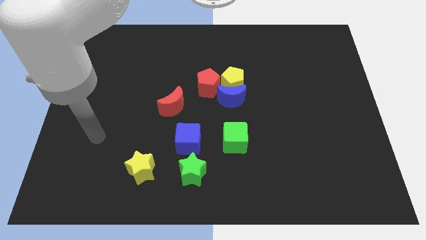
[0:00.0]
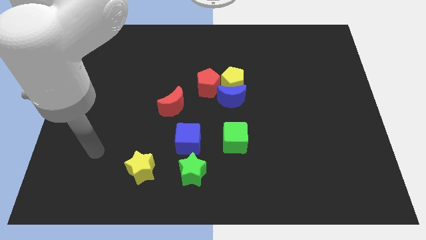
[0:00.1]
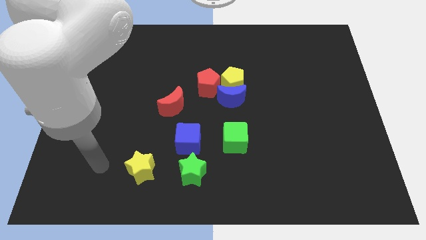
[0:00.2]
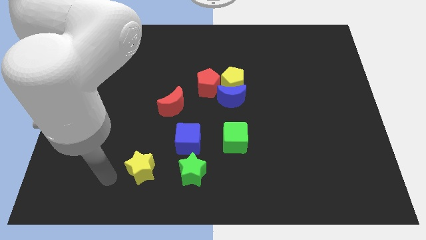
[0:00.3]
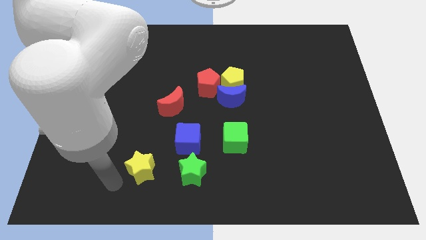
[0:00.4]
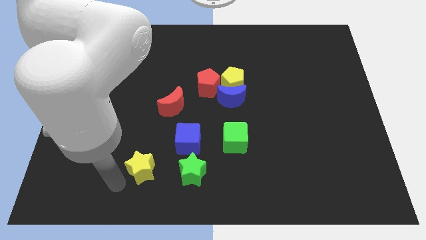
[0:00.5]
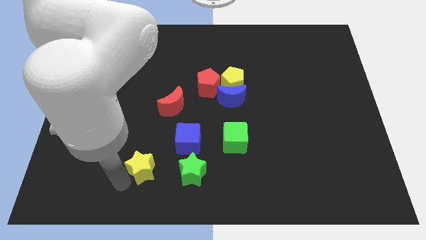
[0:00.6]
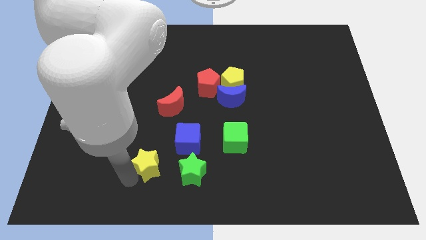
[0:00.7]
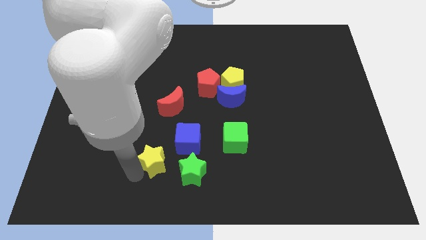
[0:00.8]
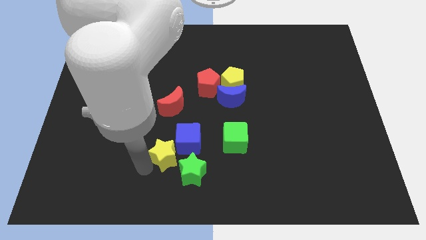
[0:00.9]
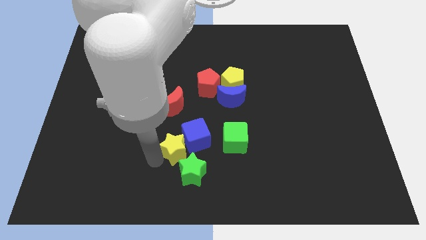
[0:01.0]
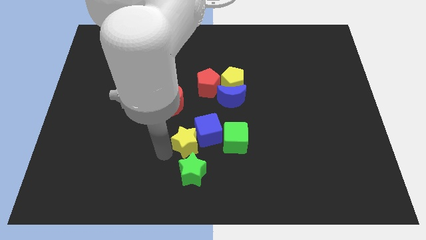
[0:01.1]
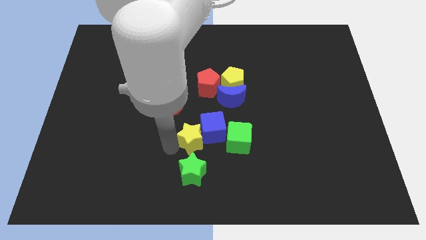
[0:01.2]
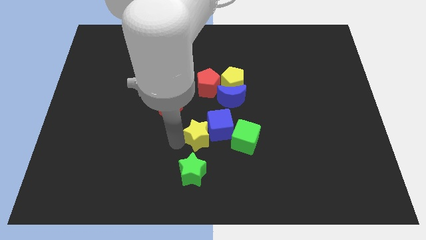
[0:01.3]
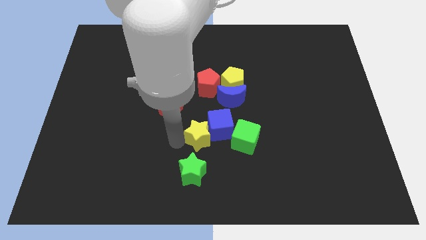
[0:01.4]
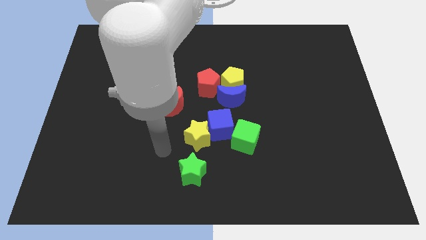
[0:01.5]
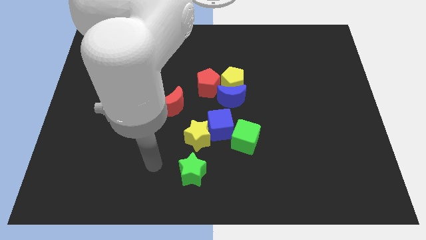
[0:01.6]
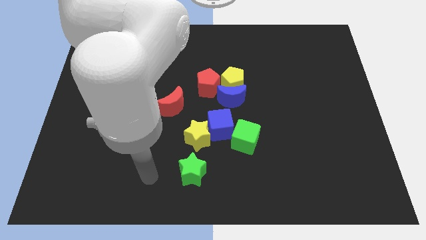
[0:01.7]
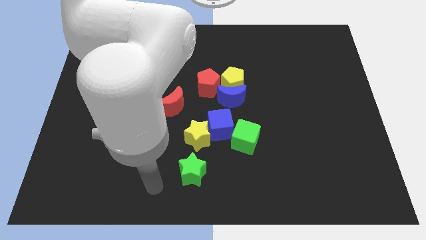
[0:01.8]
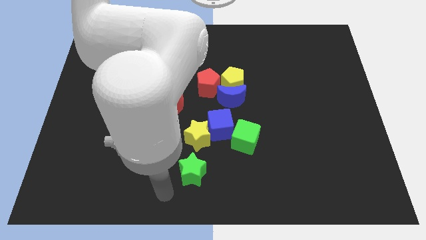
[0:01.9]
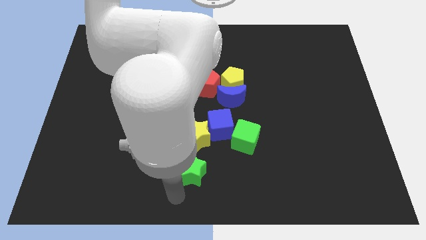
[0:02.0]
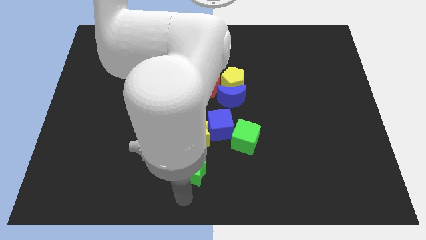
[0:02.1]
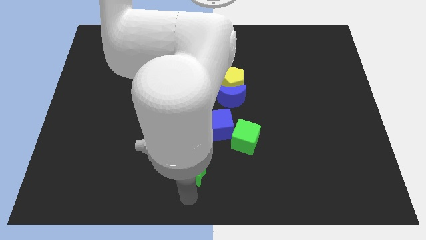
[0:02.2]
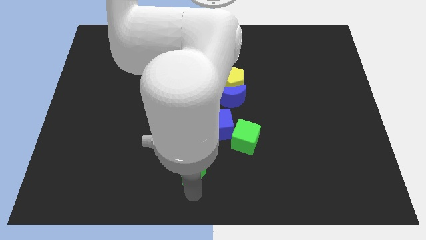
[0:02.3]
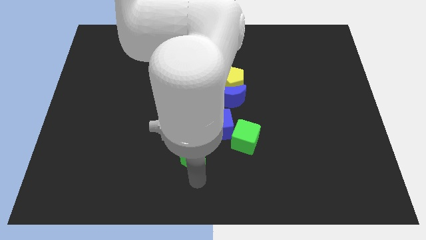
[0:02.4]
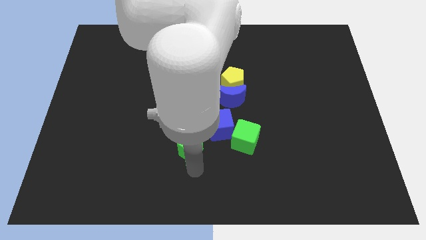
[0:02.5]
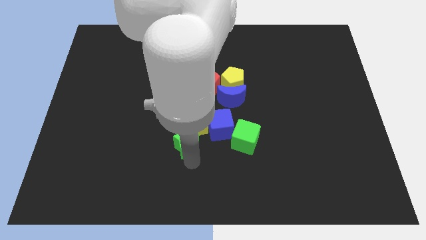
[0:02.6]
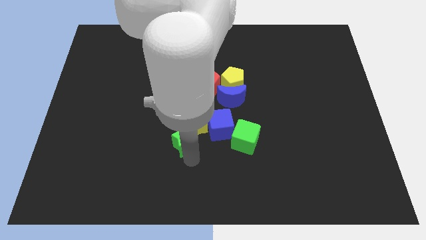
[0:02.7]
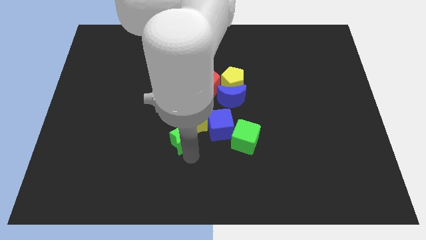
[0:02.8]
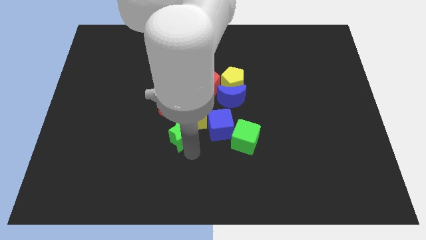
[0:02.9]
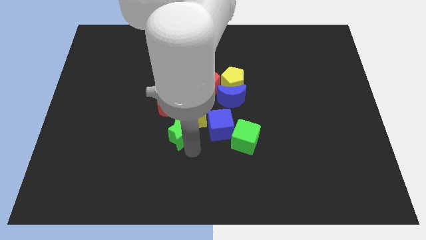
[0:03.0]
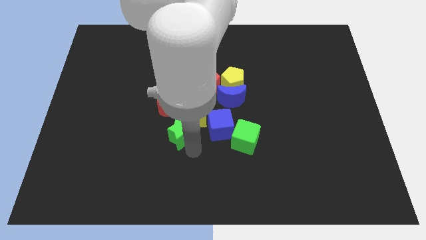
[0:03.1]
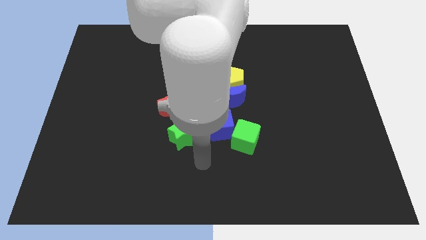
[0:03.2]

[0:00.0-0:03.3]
push the yellow star and green star to the left of the blue cube

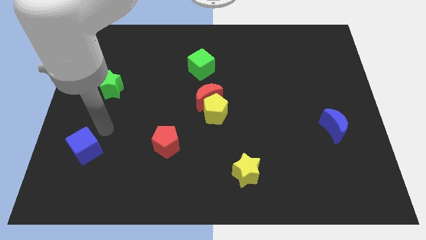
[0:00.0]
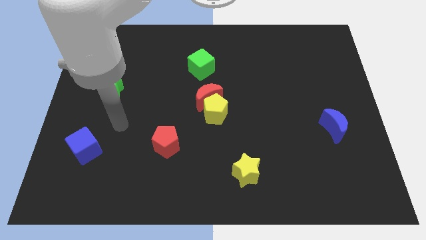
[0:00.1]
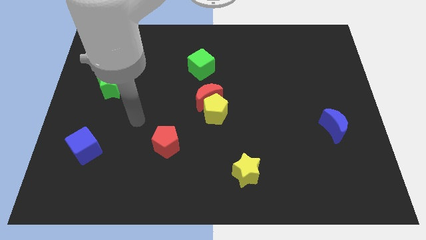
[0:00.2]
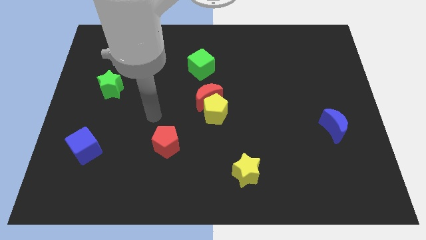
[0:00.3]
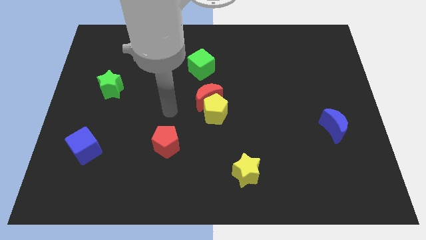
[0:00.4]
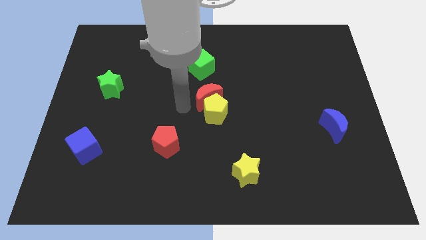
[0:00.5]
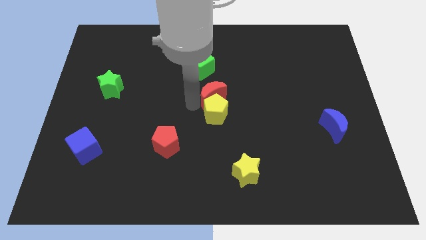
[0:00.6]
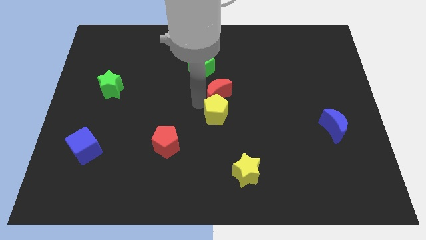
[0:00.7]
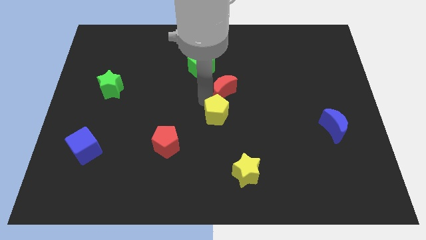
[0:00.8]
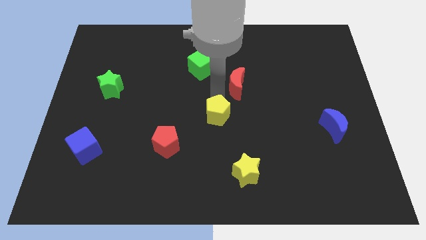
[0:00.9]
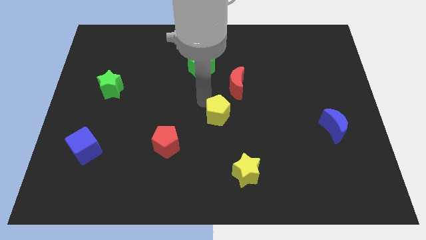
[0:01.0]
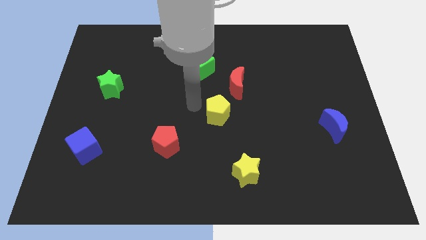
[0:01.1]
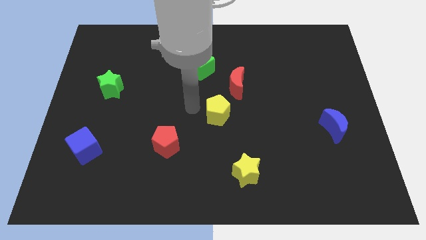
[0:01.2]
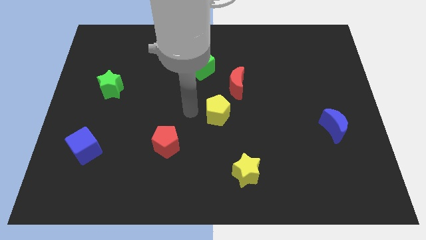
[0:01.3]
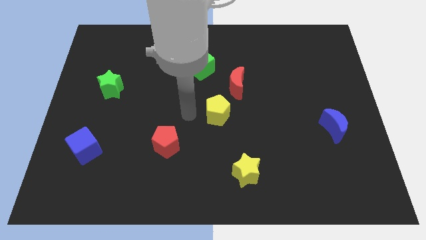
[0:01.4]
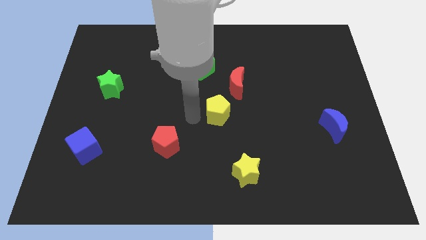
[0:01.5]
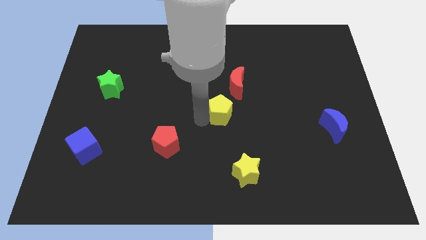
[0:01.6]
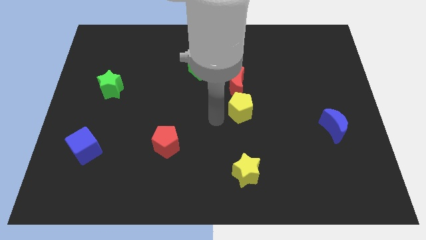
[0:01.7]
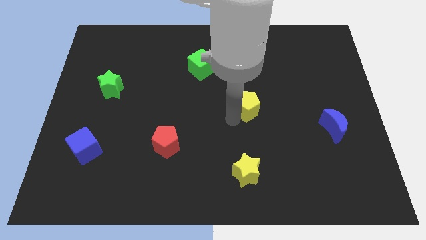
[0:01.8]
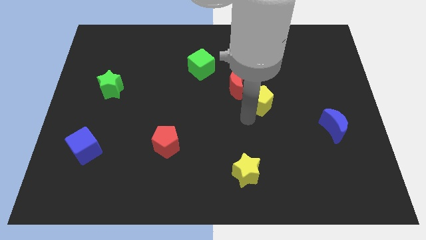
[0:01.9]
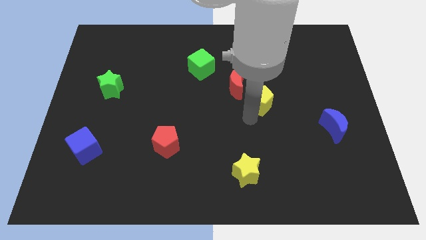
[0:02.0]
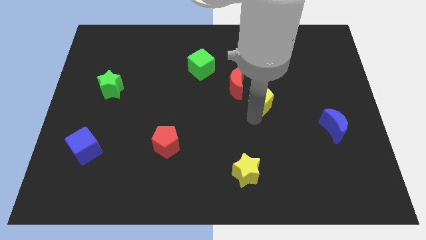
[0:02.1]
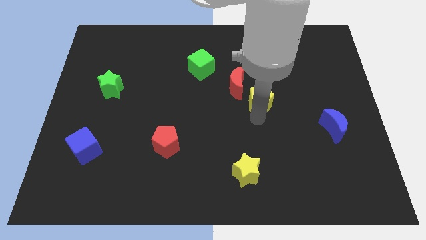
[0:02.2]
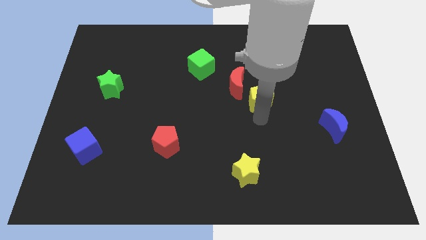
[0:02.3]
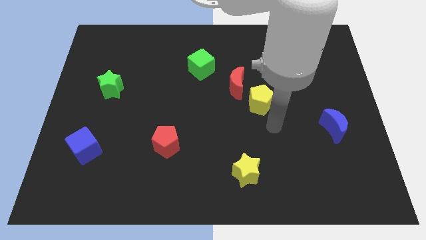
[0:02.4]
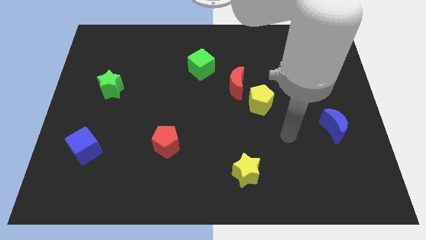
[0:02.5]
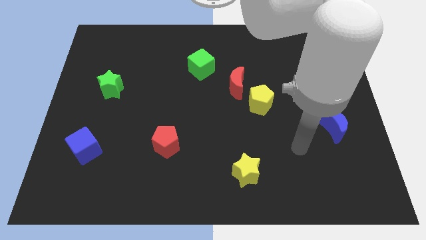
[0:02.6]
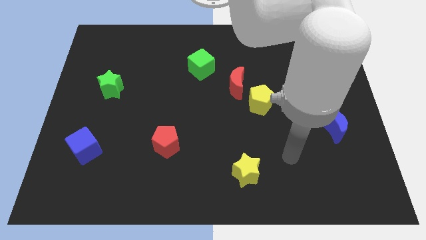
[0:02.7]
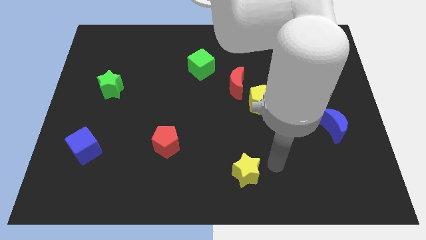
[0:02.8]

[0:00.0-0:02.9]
separate the red moon from the yellow pentagon

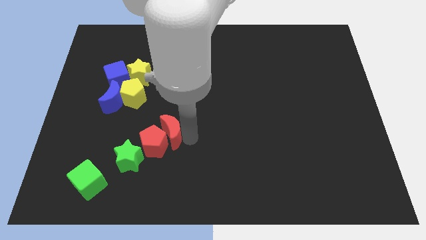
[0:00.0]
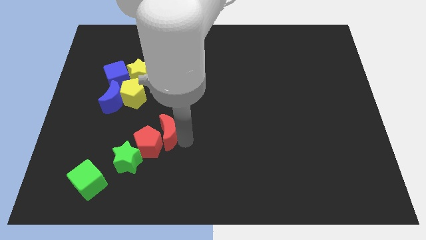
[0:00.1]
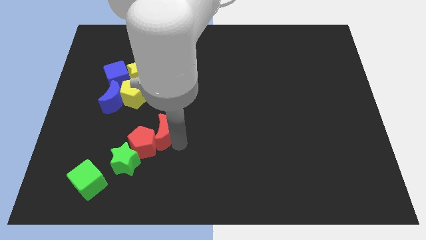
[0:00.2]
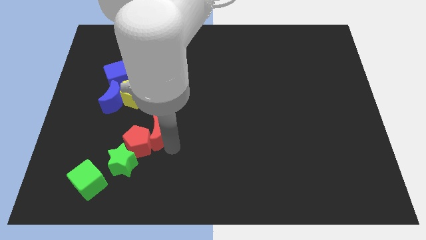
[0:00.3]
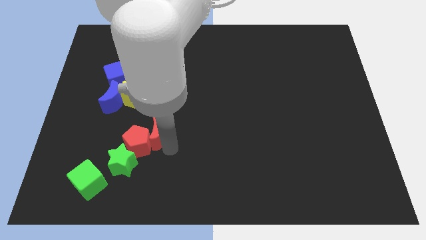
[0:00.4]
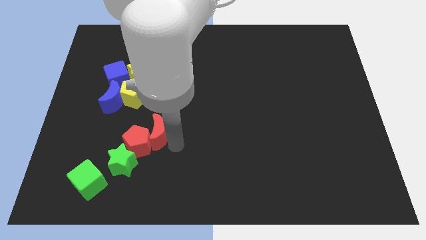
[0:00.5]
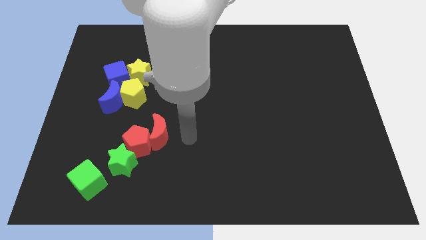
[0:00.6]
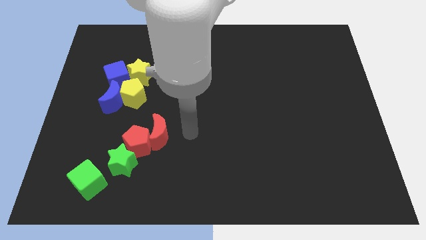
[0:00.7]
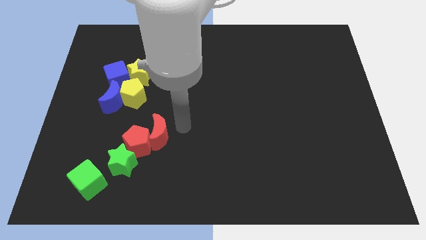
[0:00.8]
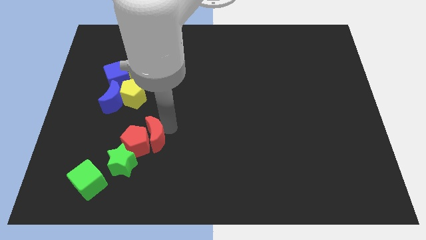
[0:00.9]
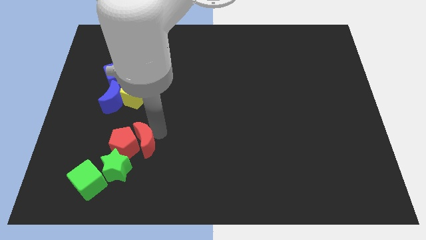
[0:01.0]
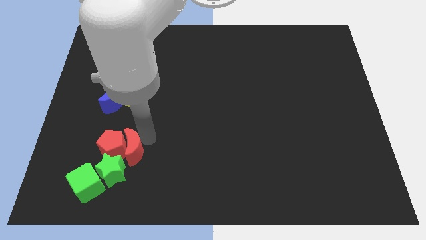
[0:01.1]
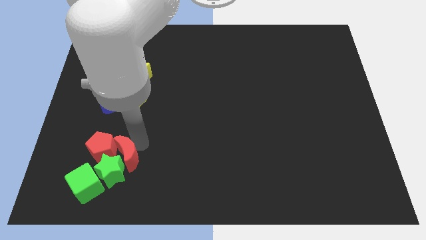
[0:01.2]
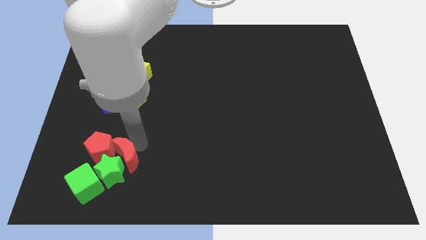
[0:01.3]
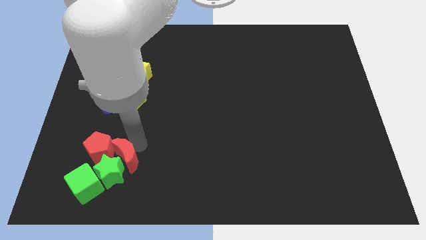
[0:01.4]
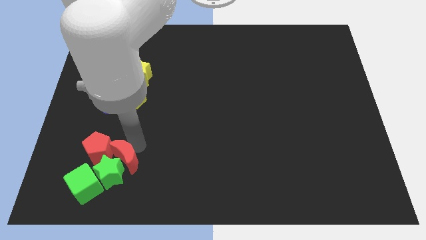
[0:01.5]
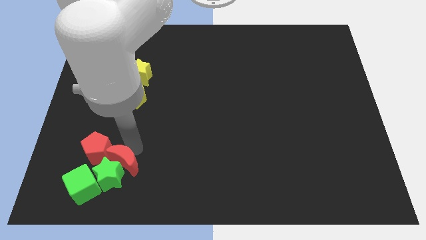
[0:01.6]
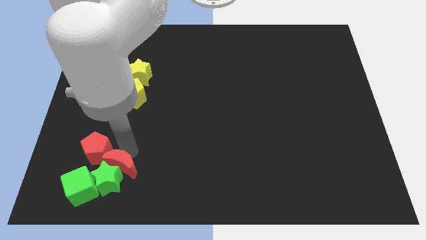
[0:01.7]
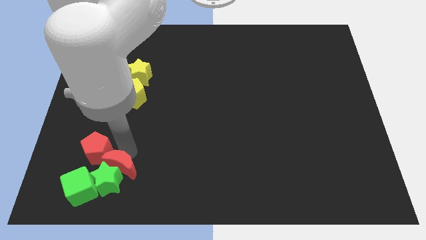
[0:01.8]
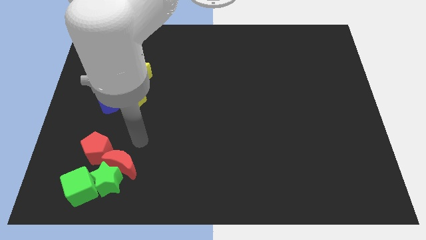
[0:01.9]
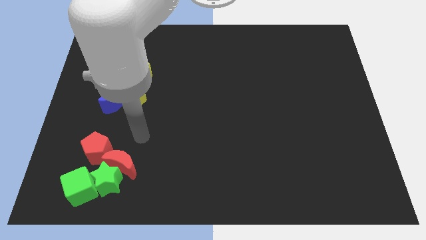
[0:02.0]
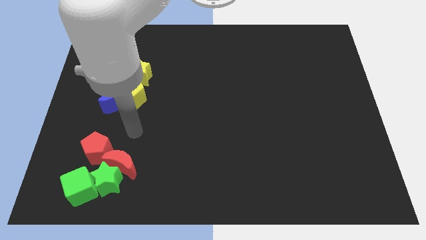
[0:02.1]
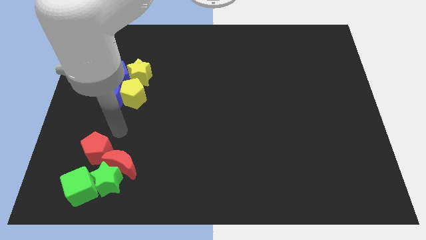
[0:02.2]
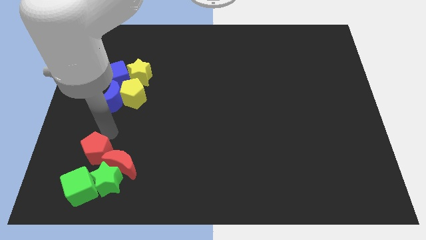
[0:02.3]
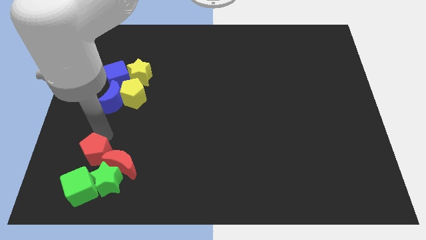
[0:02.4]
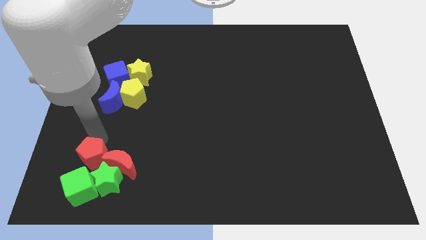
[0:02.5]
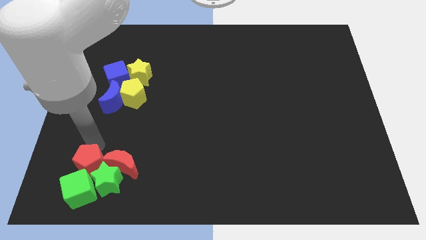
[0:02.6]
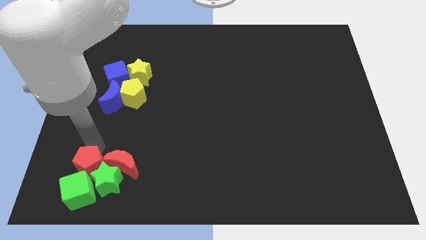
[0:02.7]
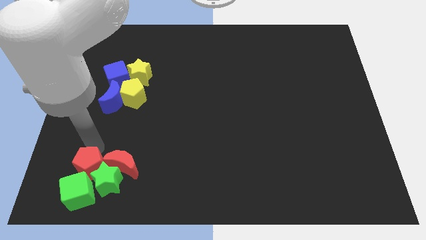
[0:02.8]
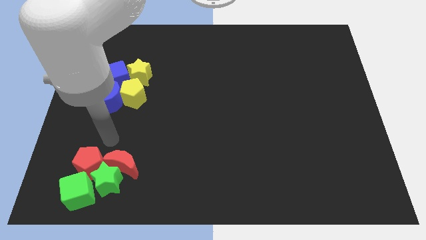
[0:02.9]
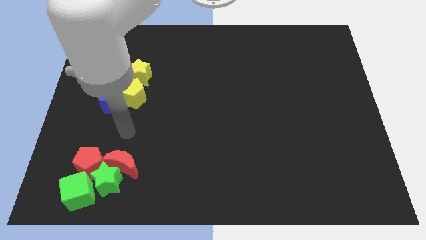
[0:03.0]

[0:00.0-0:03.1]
adjust the red and green blocks at the bottom left of the board
